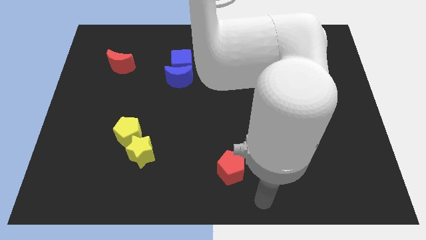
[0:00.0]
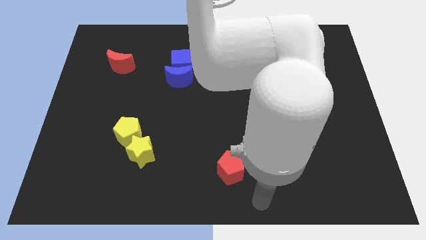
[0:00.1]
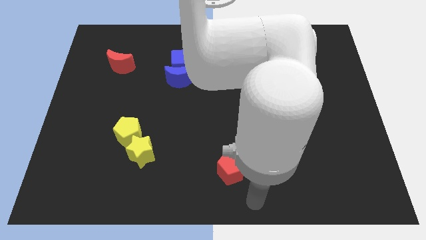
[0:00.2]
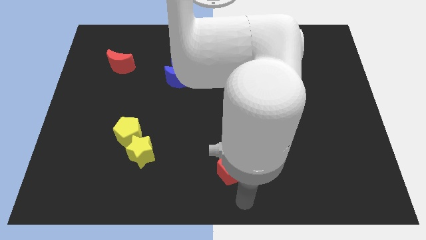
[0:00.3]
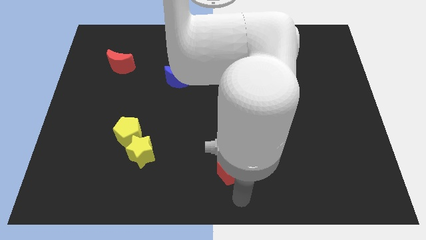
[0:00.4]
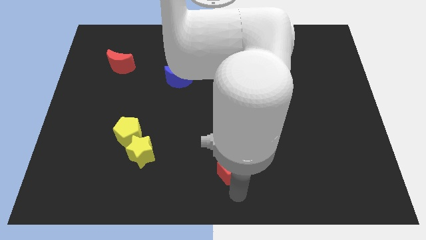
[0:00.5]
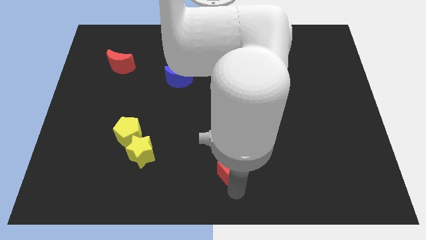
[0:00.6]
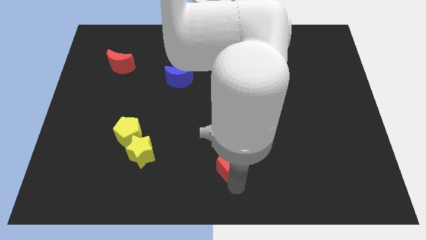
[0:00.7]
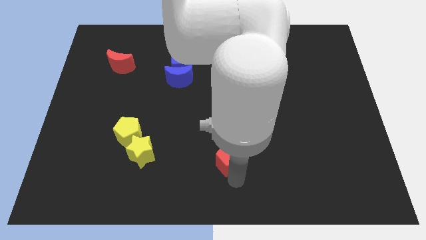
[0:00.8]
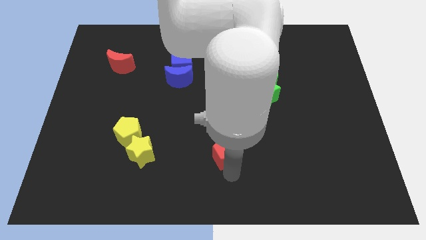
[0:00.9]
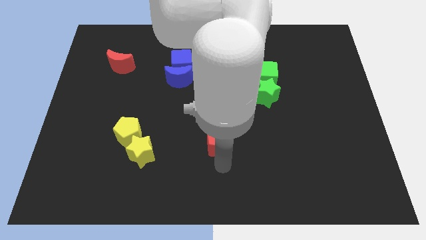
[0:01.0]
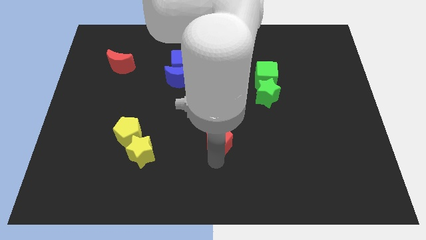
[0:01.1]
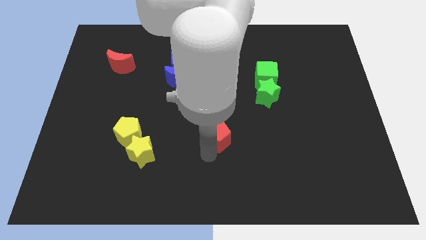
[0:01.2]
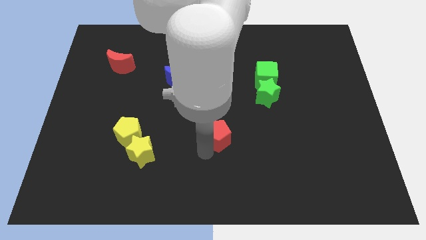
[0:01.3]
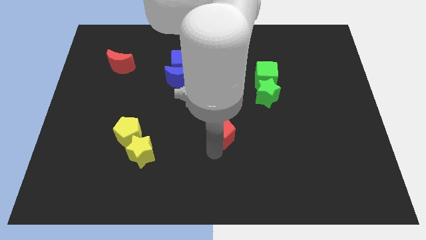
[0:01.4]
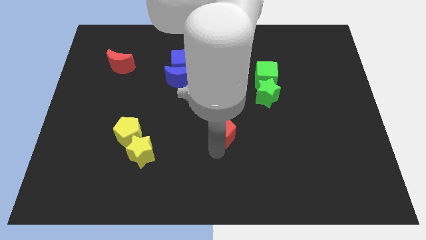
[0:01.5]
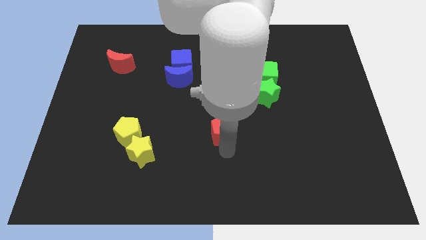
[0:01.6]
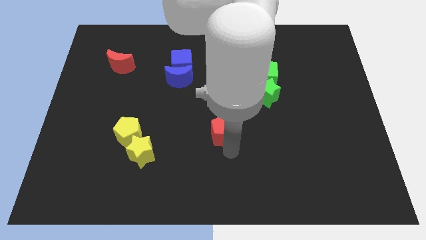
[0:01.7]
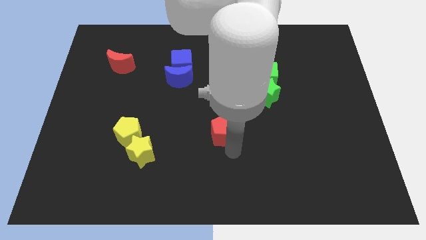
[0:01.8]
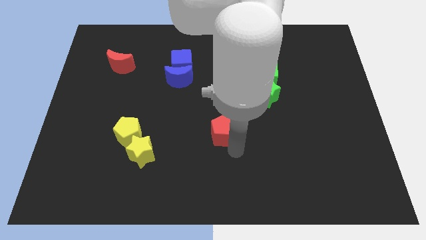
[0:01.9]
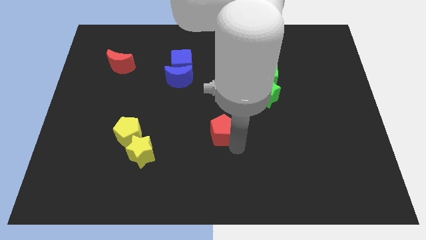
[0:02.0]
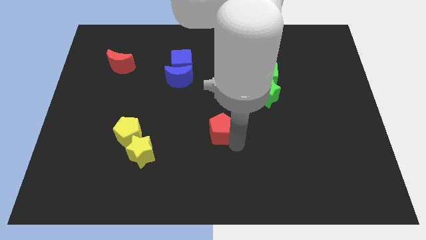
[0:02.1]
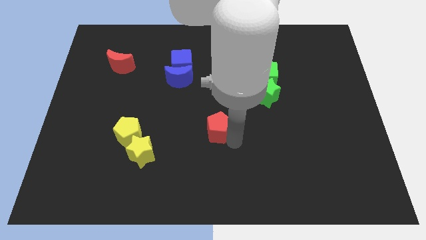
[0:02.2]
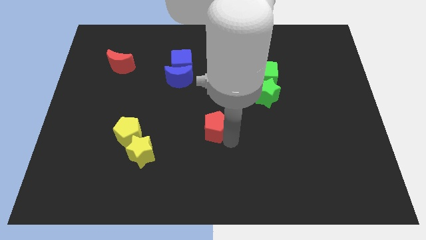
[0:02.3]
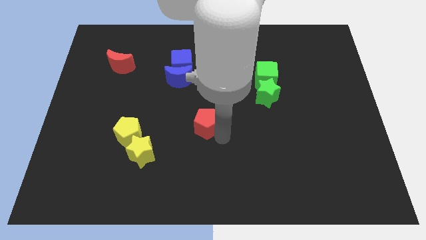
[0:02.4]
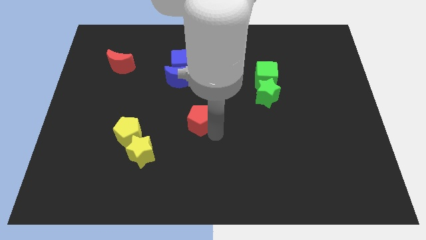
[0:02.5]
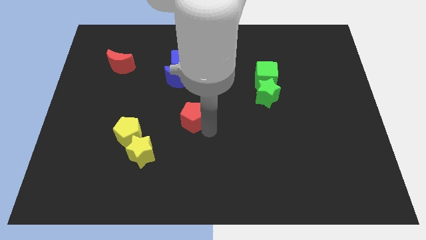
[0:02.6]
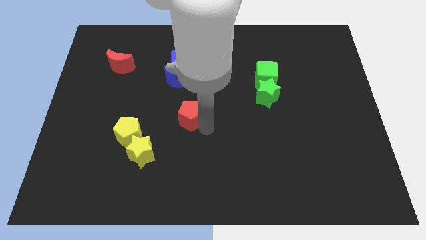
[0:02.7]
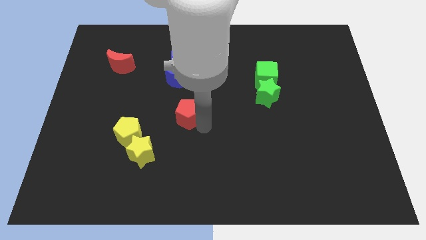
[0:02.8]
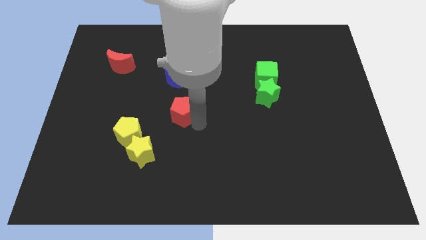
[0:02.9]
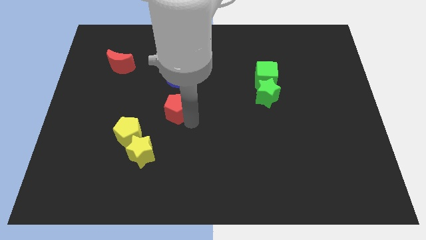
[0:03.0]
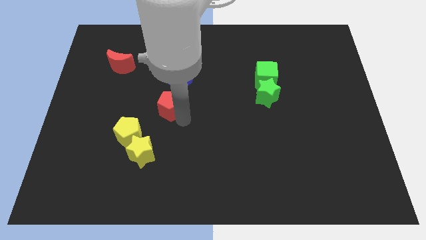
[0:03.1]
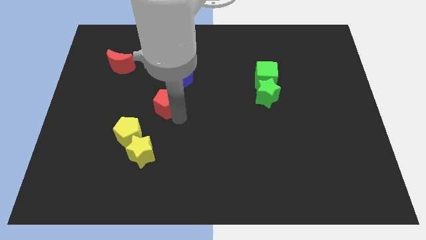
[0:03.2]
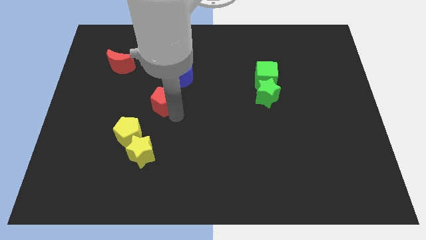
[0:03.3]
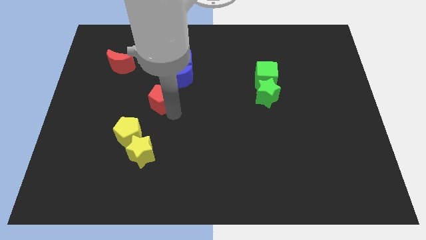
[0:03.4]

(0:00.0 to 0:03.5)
place the red pentagon in between the blue moon and yellow pentagon

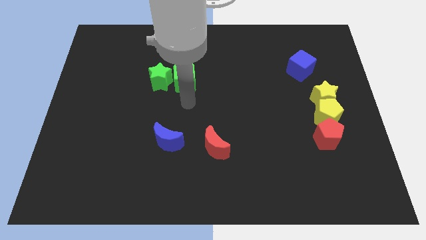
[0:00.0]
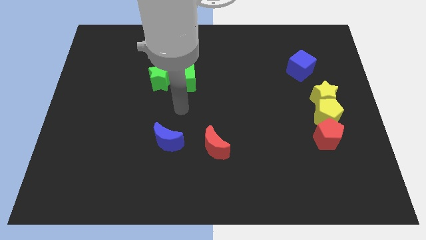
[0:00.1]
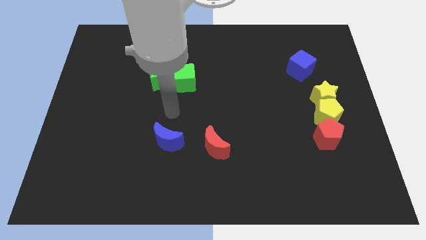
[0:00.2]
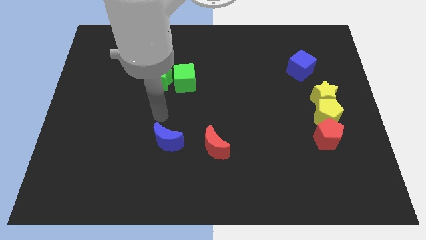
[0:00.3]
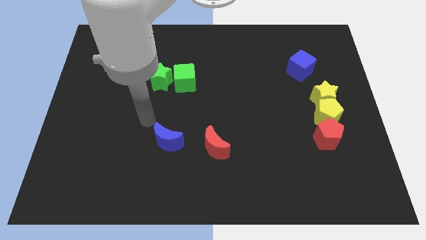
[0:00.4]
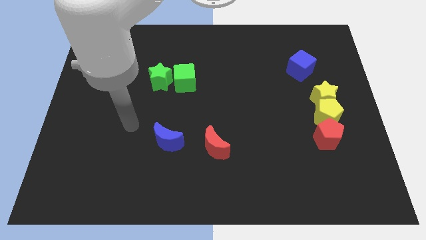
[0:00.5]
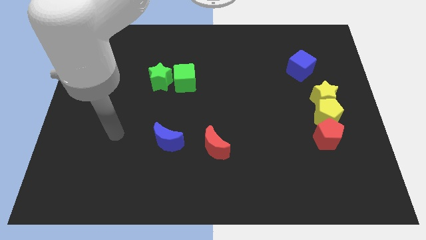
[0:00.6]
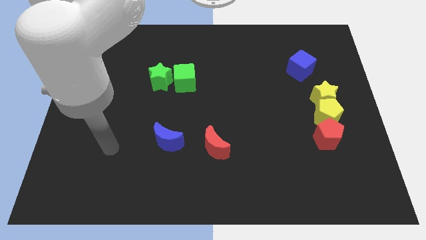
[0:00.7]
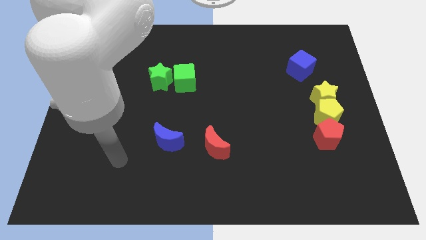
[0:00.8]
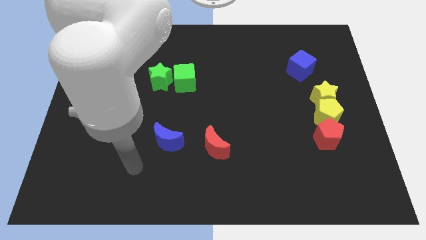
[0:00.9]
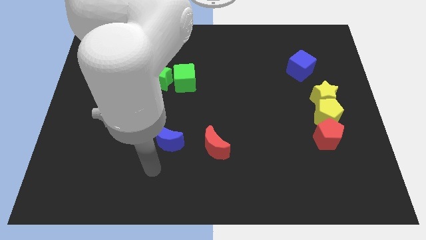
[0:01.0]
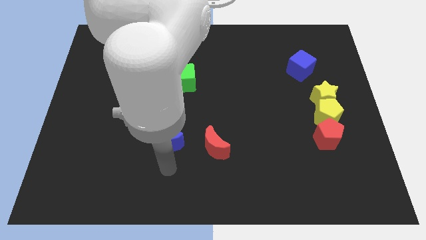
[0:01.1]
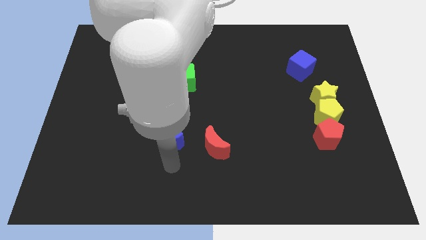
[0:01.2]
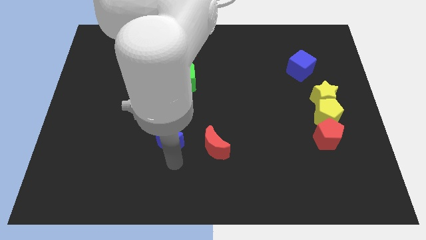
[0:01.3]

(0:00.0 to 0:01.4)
point your hand below the blue moon

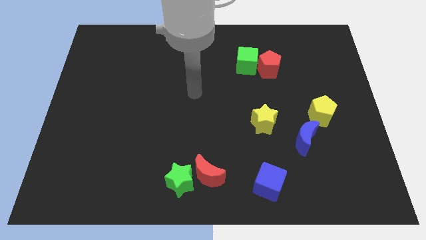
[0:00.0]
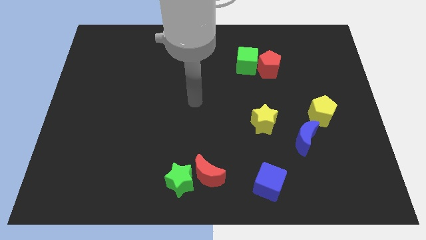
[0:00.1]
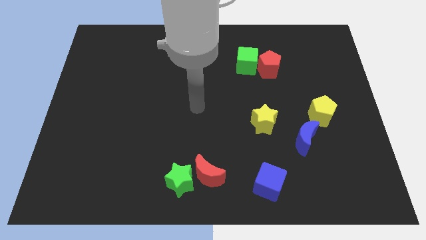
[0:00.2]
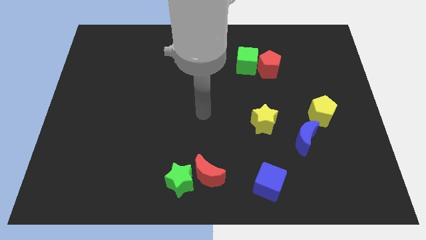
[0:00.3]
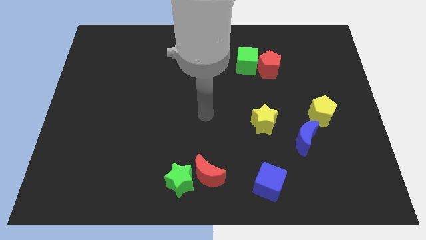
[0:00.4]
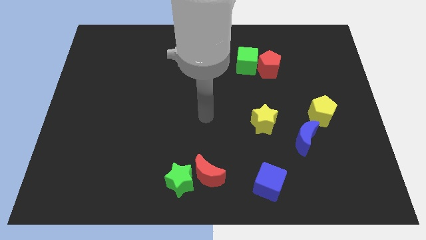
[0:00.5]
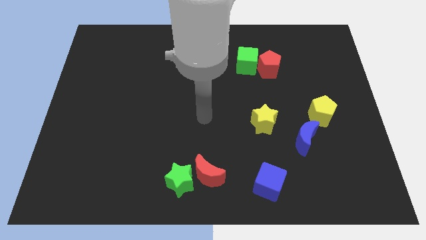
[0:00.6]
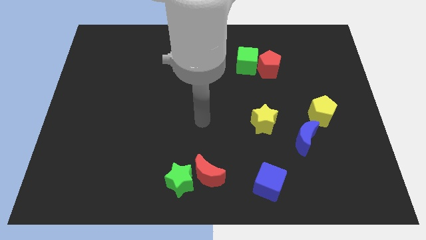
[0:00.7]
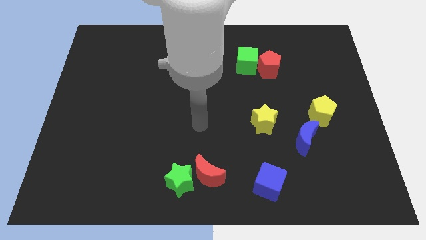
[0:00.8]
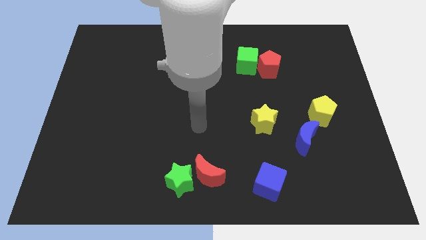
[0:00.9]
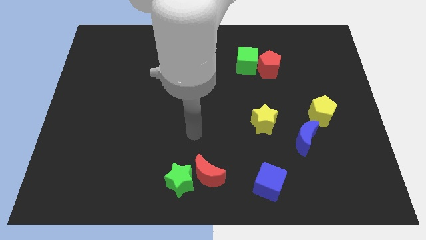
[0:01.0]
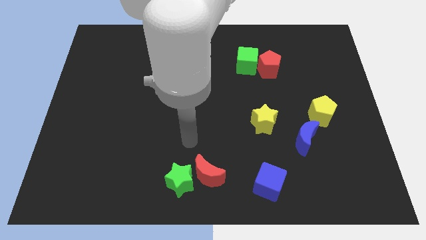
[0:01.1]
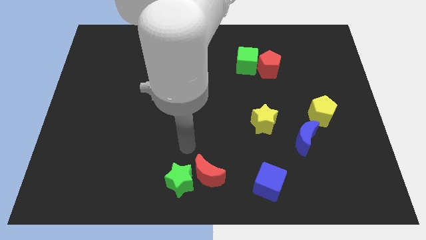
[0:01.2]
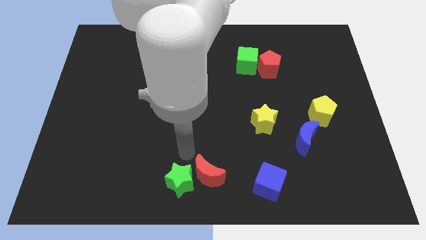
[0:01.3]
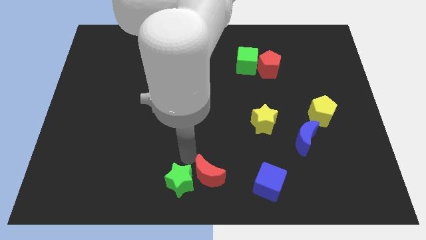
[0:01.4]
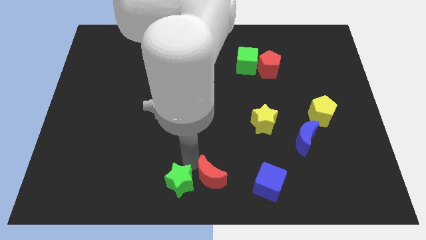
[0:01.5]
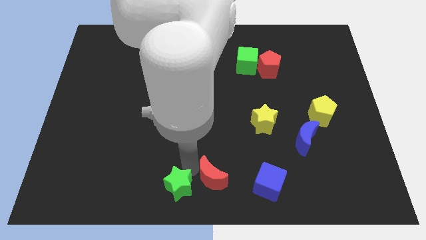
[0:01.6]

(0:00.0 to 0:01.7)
move your arm at the top left side of the red crescent

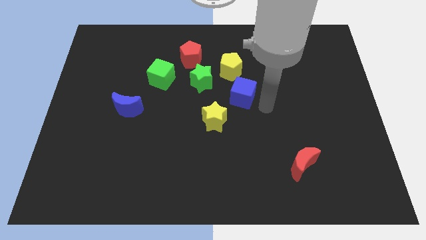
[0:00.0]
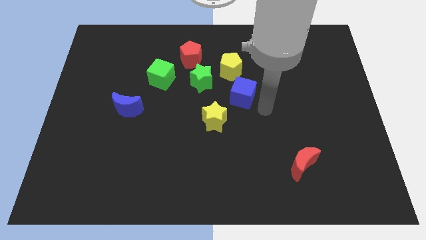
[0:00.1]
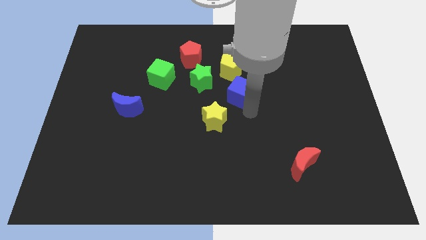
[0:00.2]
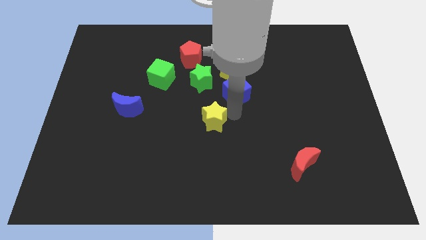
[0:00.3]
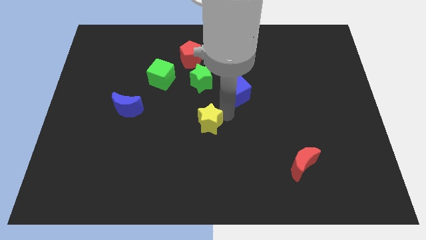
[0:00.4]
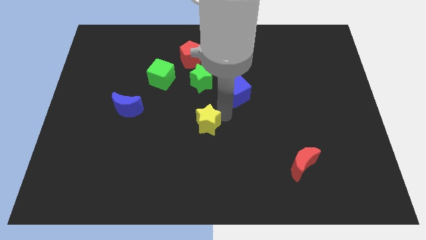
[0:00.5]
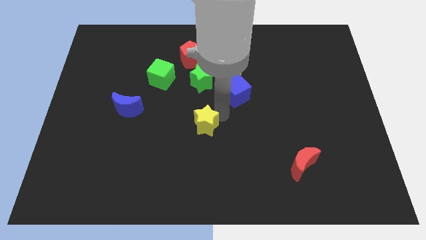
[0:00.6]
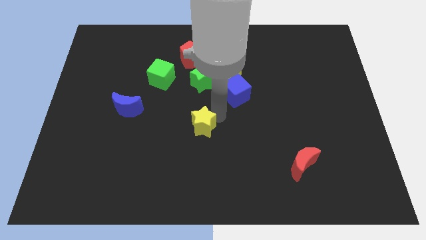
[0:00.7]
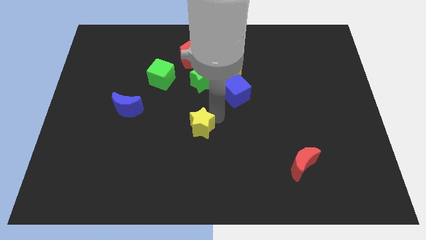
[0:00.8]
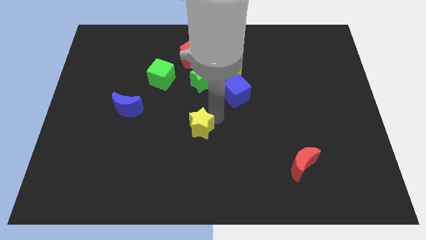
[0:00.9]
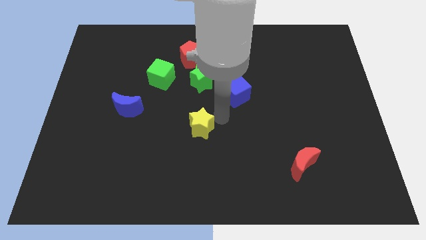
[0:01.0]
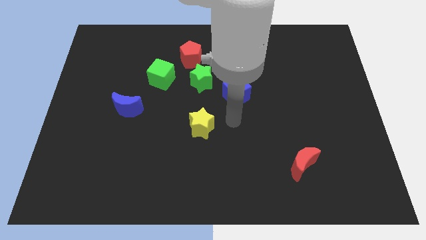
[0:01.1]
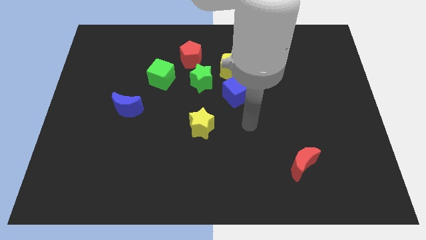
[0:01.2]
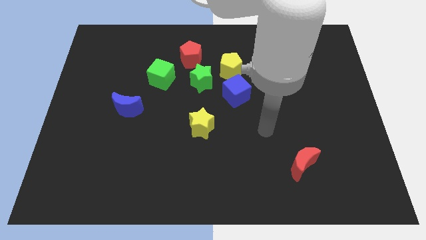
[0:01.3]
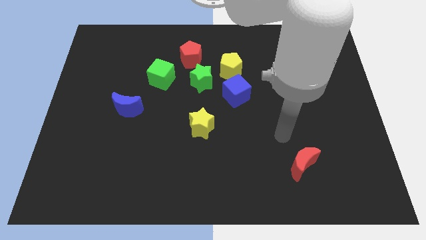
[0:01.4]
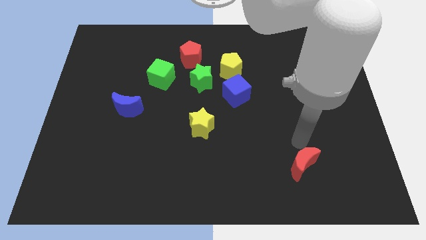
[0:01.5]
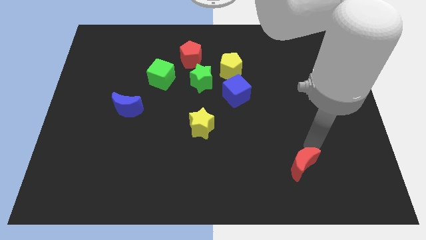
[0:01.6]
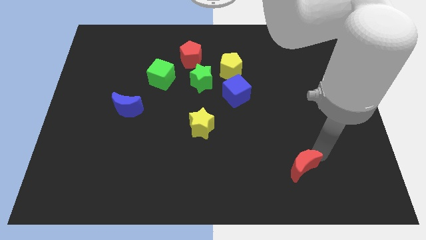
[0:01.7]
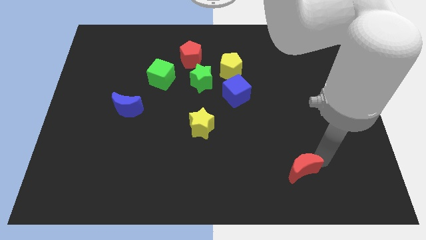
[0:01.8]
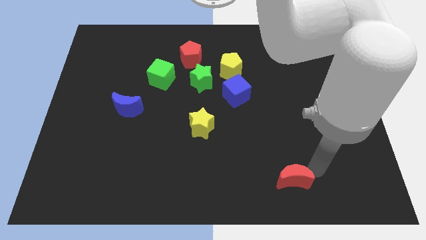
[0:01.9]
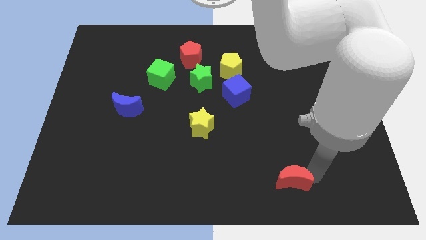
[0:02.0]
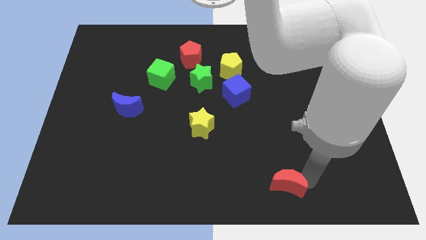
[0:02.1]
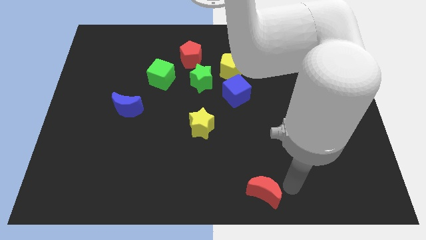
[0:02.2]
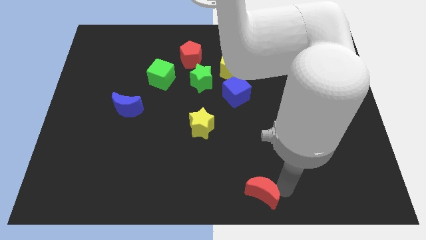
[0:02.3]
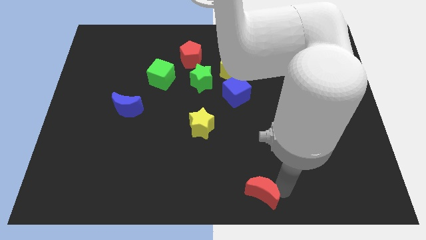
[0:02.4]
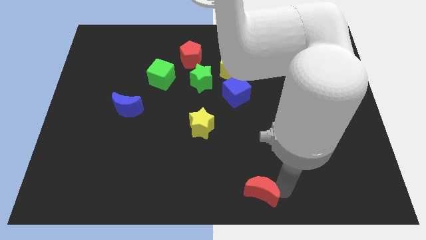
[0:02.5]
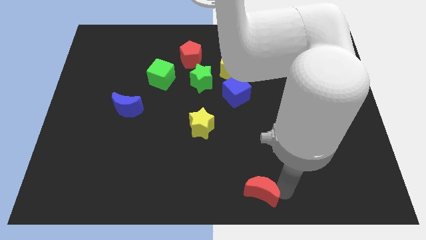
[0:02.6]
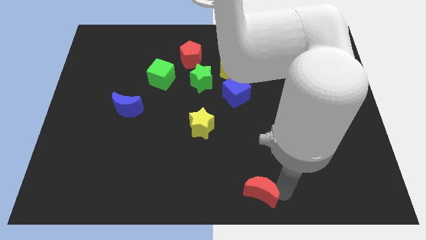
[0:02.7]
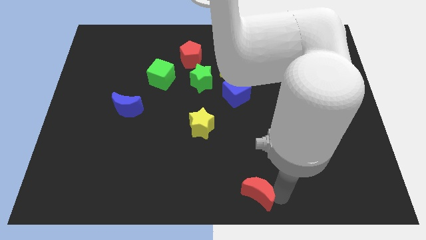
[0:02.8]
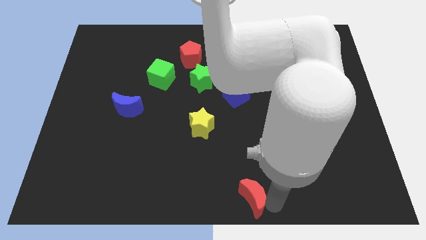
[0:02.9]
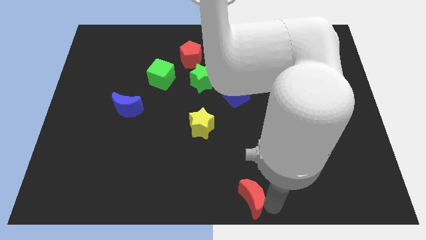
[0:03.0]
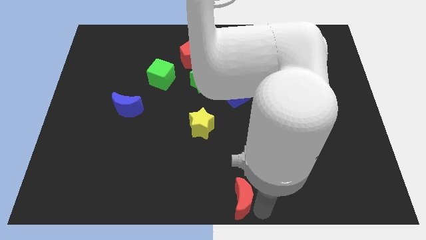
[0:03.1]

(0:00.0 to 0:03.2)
push red crescent below blue cube
